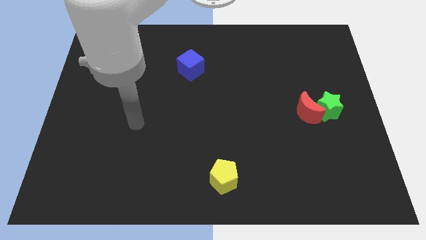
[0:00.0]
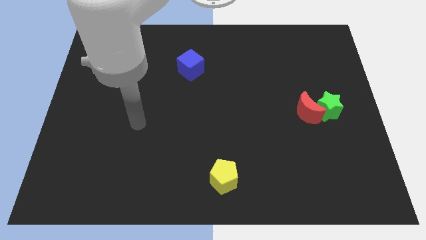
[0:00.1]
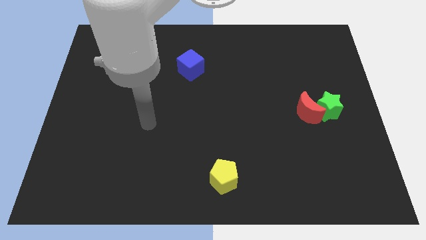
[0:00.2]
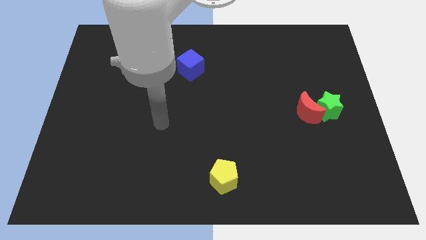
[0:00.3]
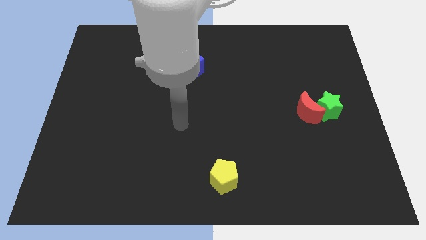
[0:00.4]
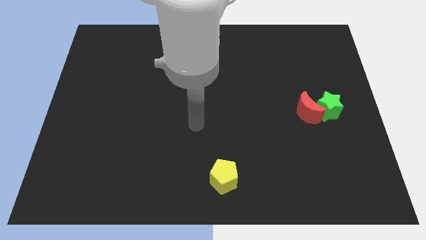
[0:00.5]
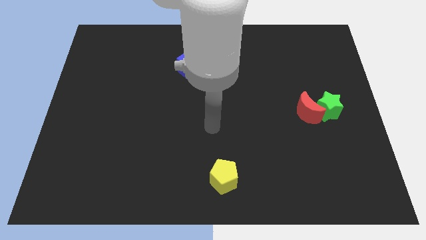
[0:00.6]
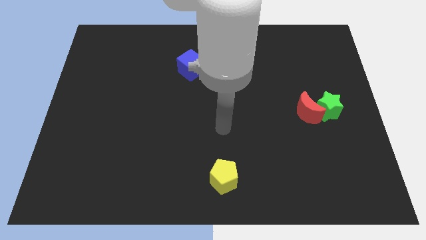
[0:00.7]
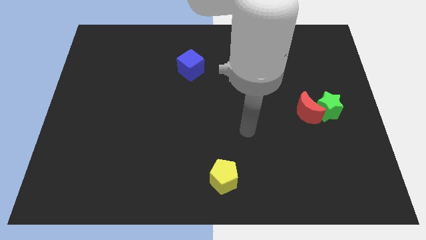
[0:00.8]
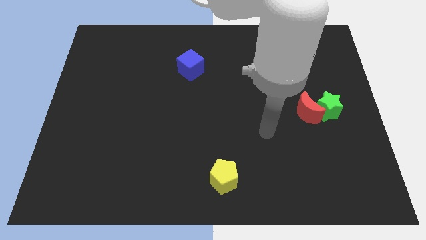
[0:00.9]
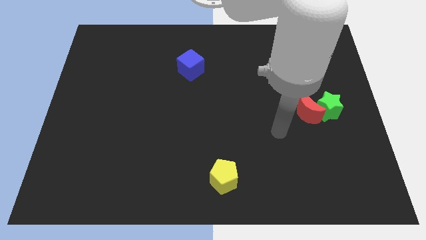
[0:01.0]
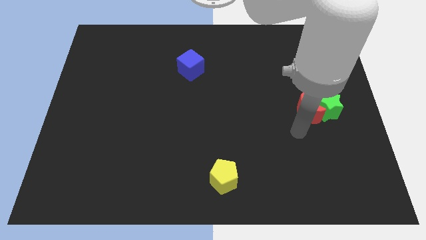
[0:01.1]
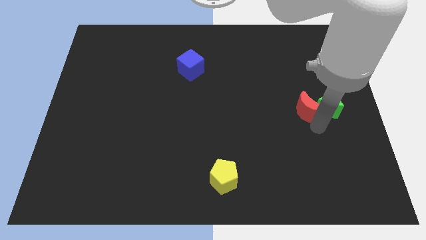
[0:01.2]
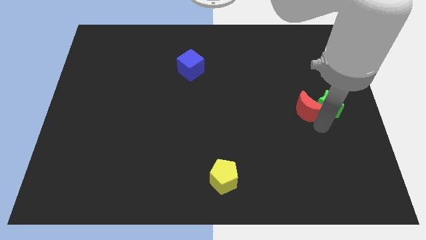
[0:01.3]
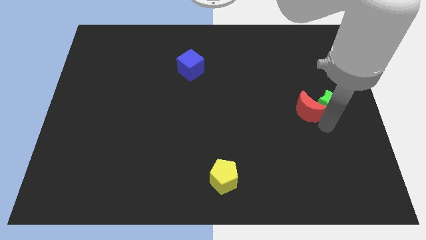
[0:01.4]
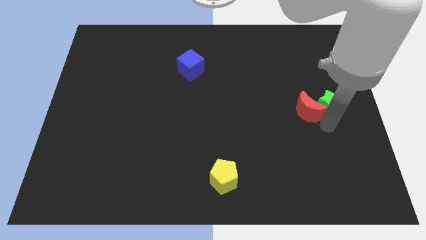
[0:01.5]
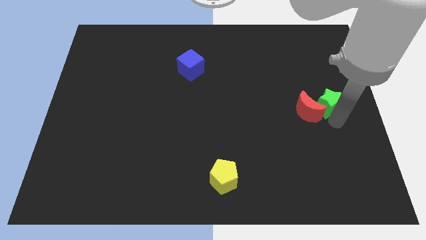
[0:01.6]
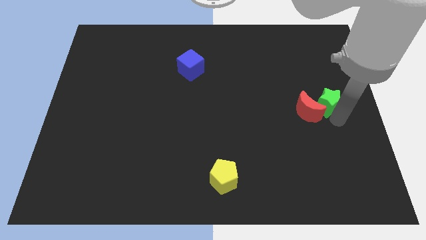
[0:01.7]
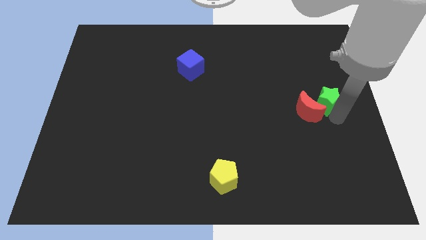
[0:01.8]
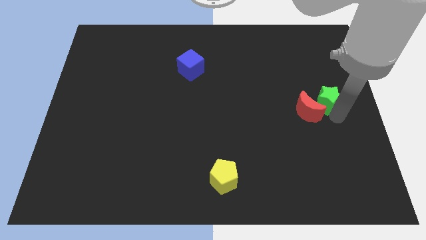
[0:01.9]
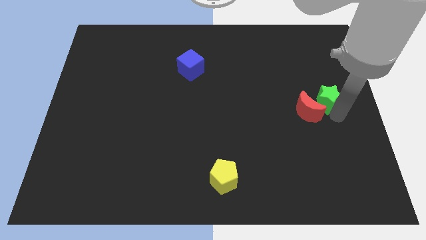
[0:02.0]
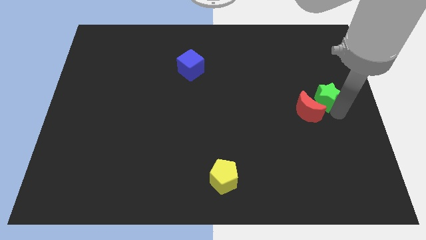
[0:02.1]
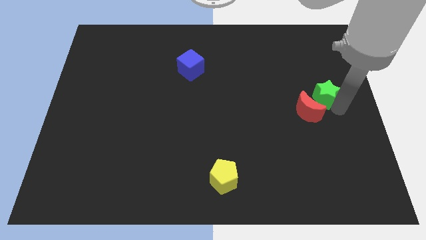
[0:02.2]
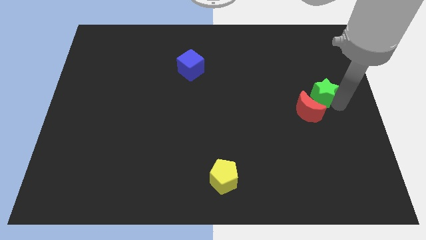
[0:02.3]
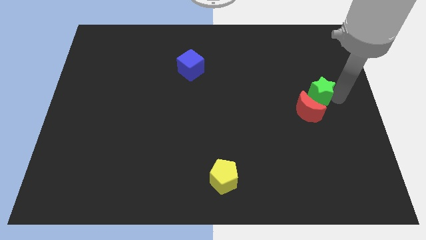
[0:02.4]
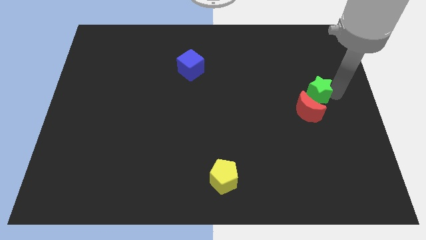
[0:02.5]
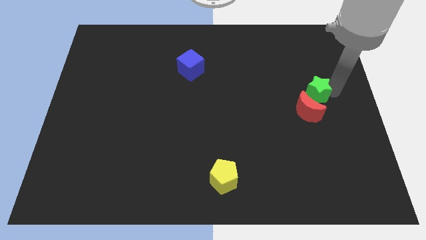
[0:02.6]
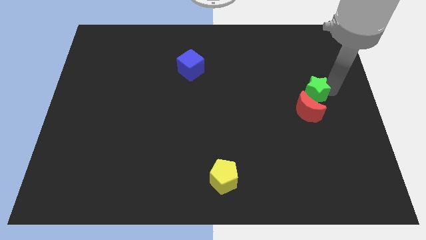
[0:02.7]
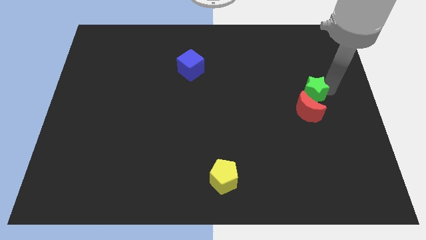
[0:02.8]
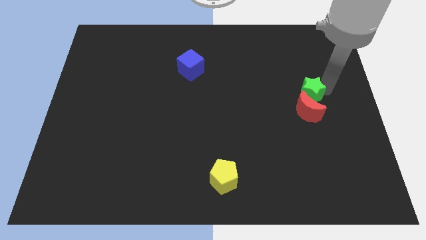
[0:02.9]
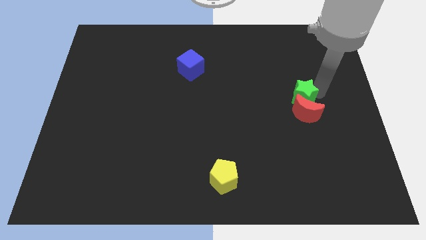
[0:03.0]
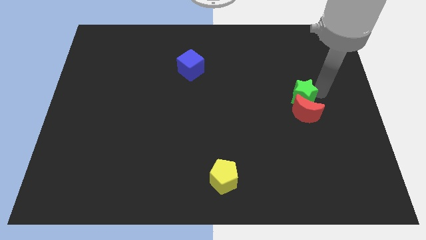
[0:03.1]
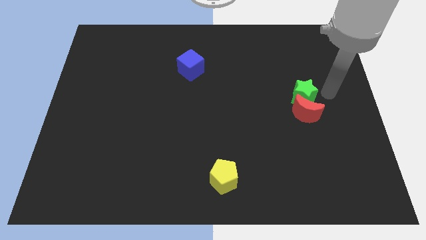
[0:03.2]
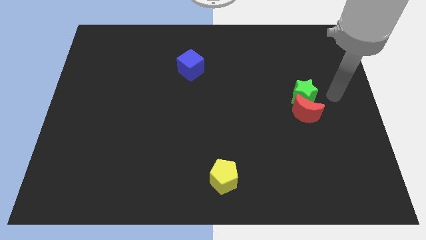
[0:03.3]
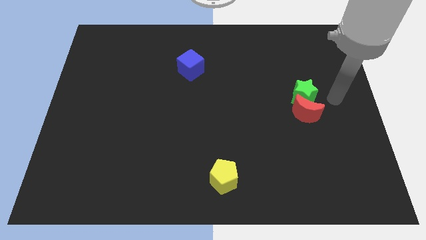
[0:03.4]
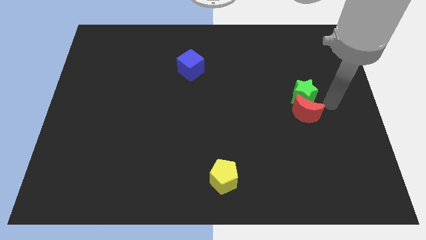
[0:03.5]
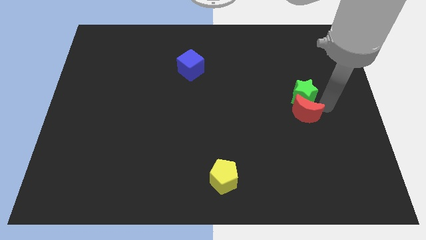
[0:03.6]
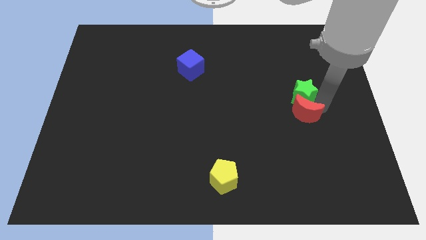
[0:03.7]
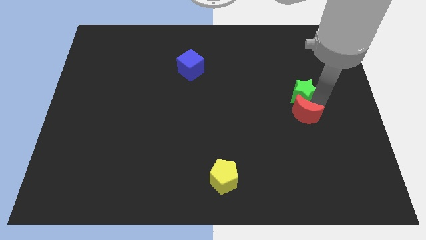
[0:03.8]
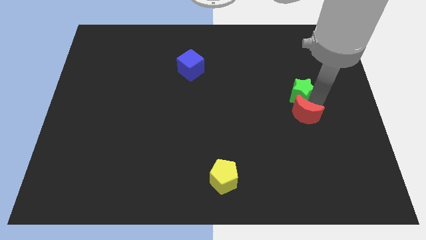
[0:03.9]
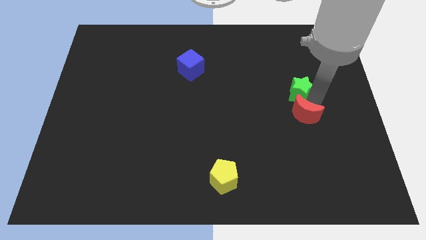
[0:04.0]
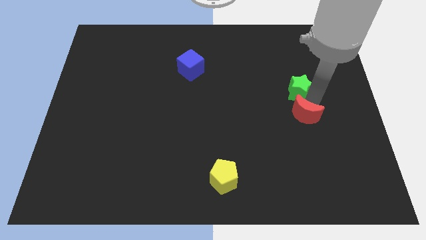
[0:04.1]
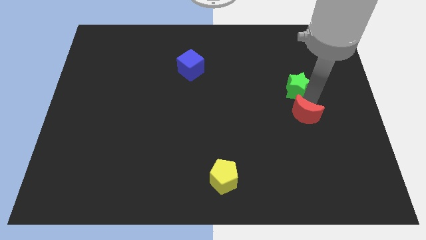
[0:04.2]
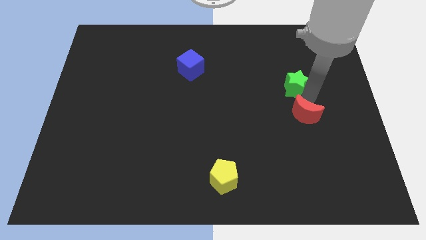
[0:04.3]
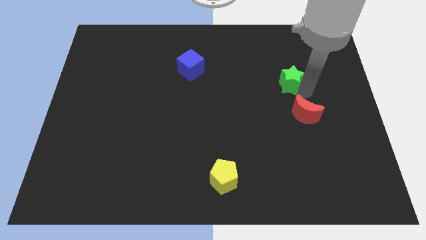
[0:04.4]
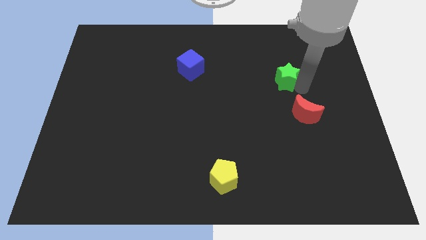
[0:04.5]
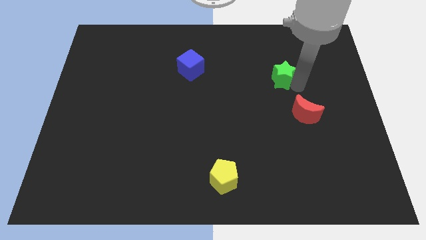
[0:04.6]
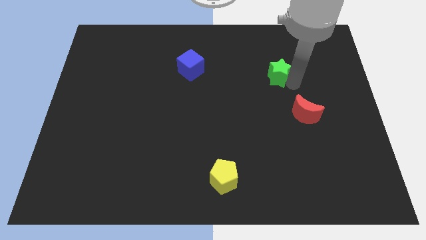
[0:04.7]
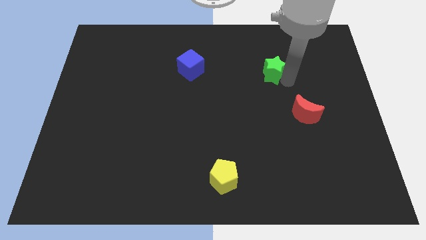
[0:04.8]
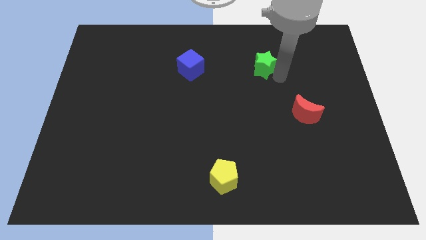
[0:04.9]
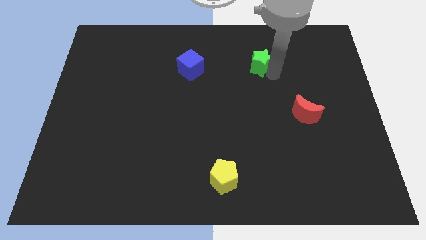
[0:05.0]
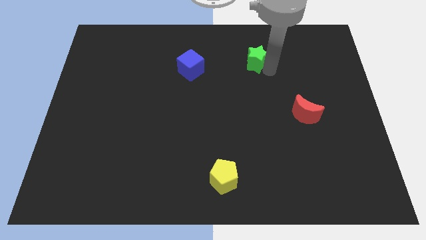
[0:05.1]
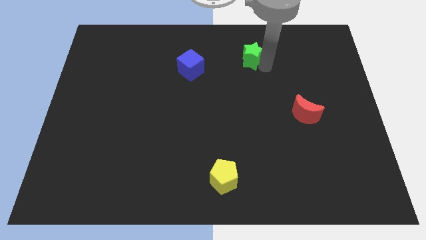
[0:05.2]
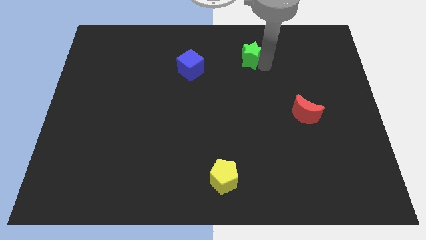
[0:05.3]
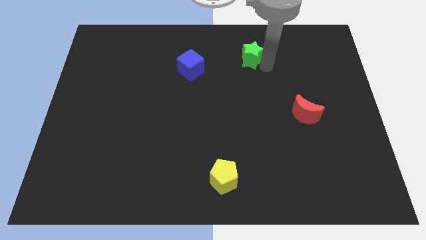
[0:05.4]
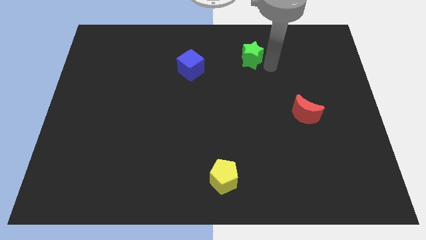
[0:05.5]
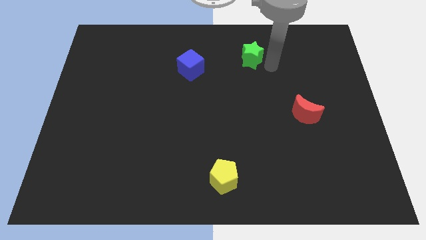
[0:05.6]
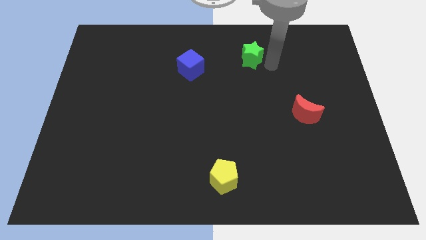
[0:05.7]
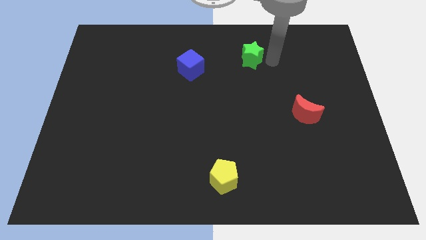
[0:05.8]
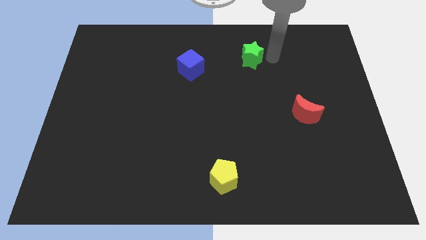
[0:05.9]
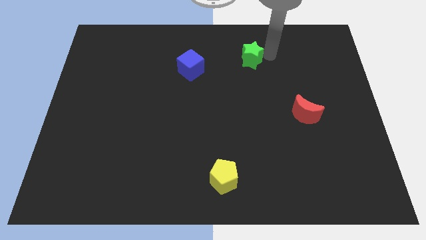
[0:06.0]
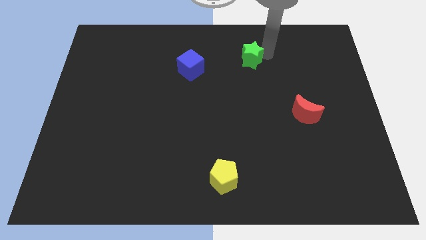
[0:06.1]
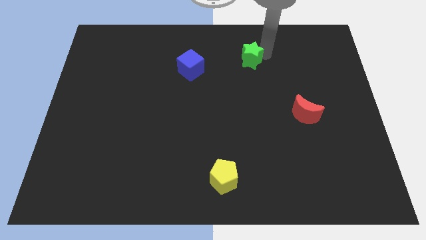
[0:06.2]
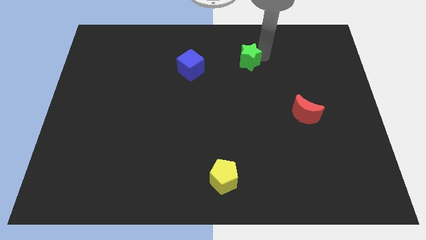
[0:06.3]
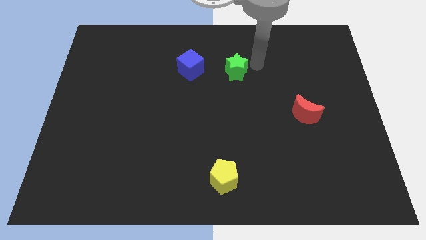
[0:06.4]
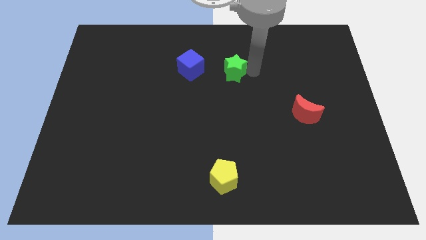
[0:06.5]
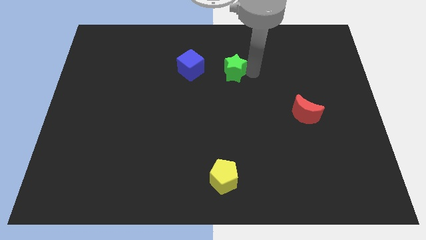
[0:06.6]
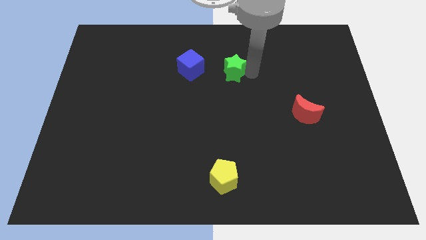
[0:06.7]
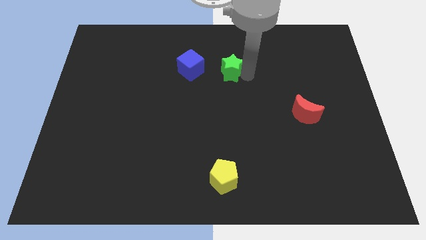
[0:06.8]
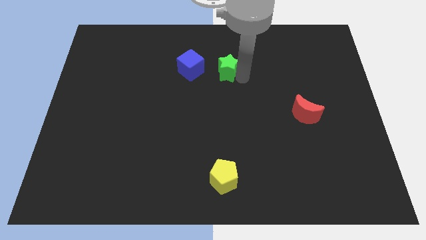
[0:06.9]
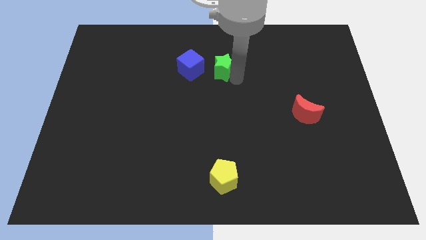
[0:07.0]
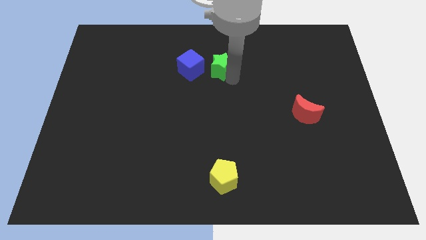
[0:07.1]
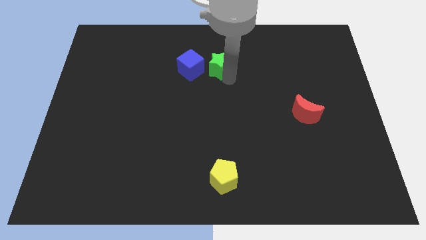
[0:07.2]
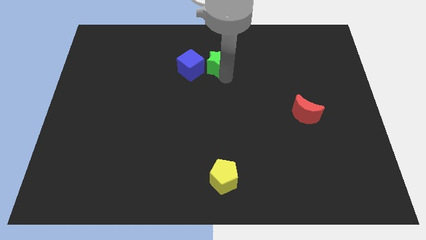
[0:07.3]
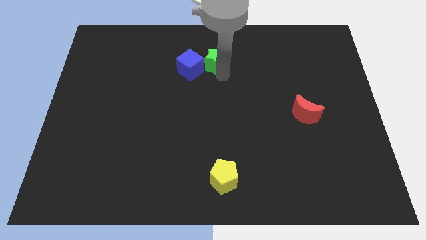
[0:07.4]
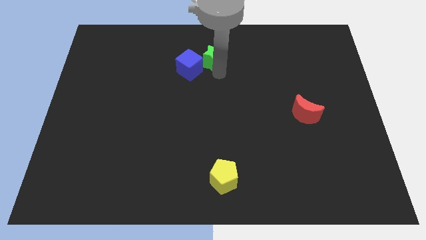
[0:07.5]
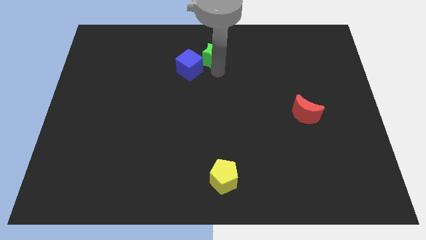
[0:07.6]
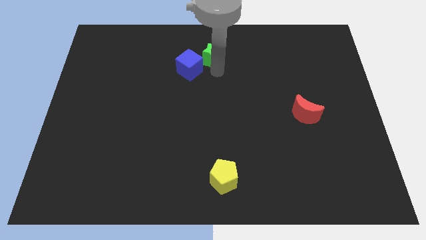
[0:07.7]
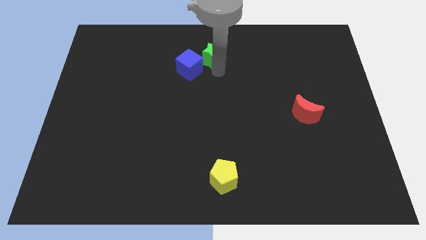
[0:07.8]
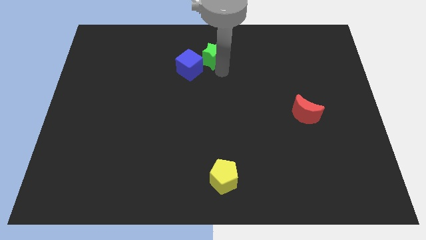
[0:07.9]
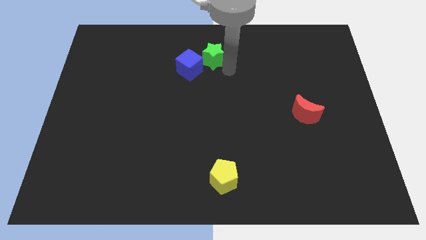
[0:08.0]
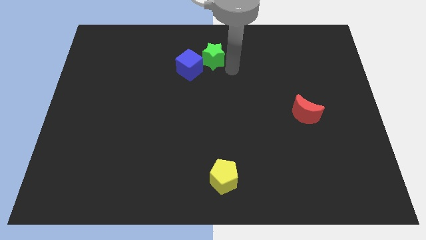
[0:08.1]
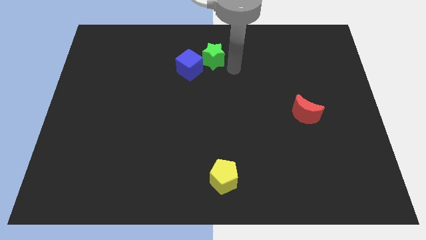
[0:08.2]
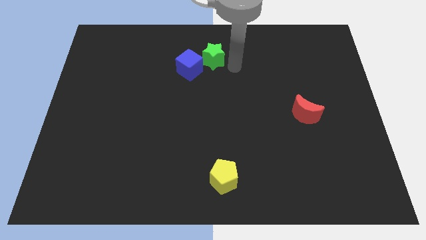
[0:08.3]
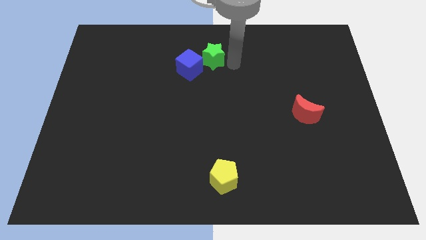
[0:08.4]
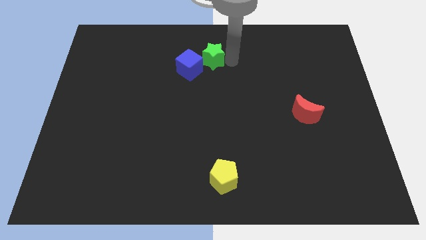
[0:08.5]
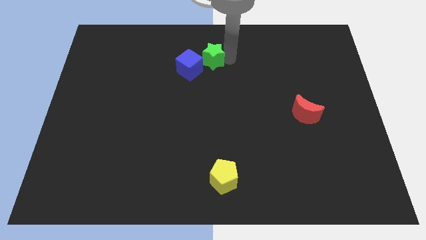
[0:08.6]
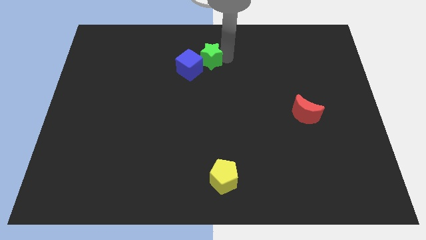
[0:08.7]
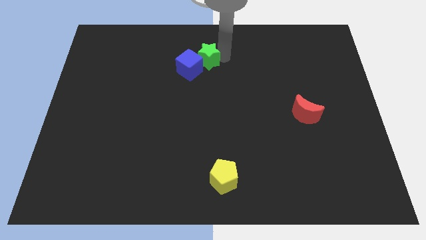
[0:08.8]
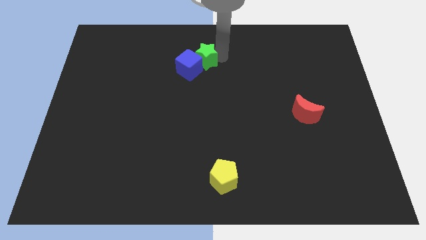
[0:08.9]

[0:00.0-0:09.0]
move the green block towards the cube
